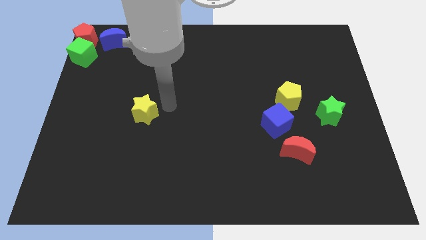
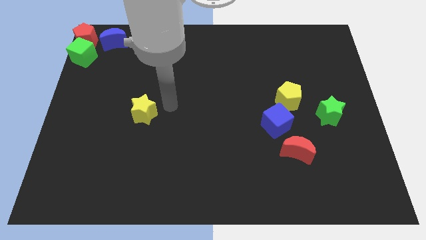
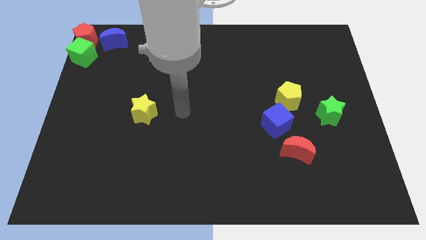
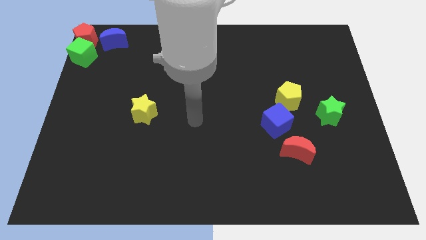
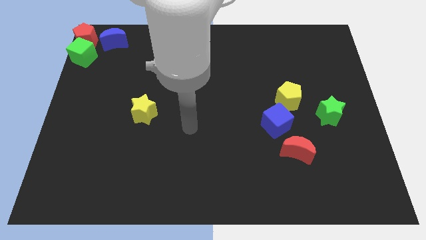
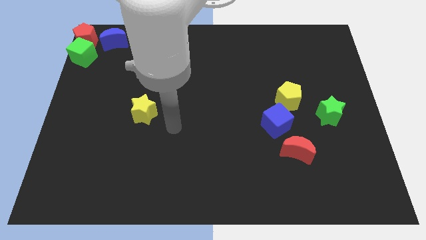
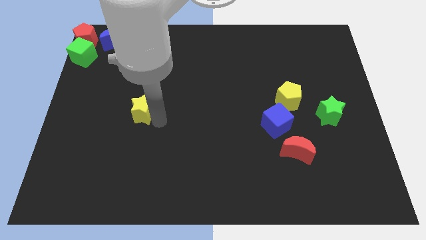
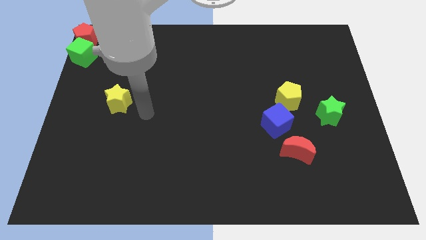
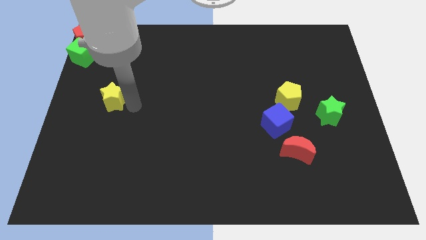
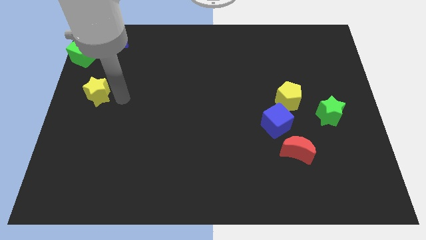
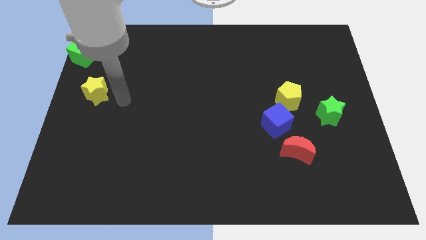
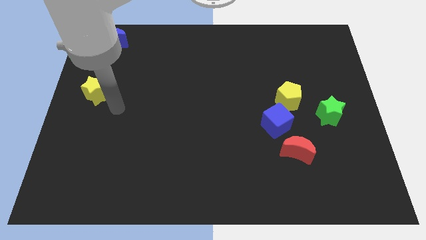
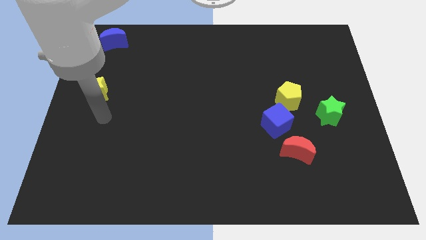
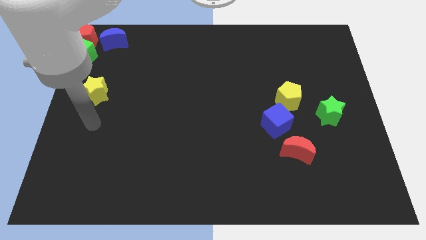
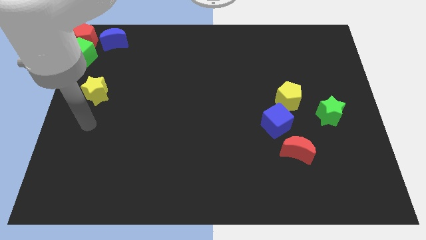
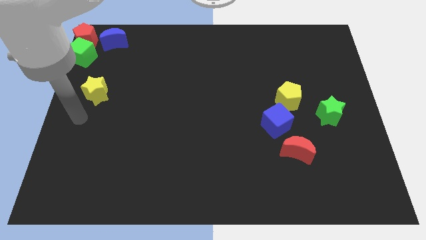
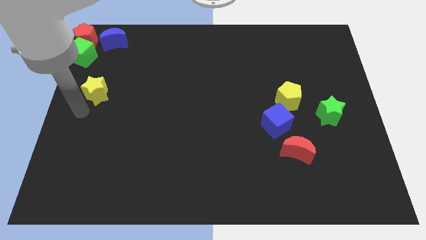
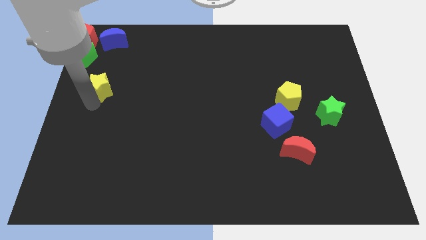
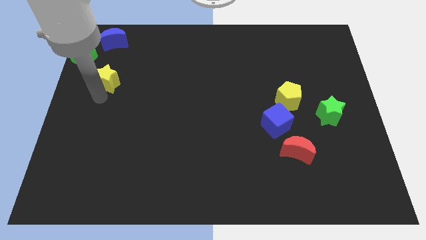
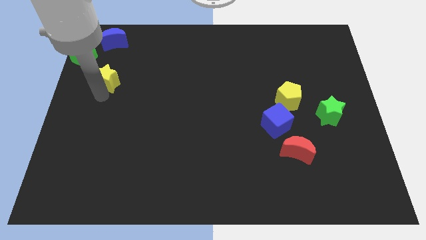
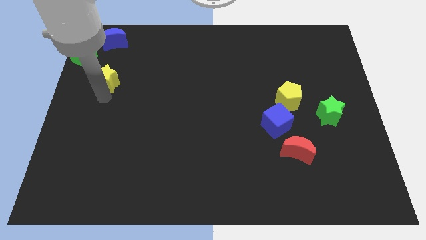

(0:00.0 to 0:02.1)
move the yellow star towards the top left corner

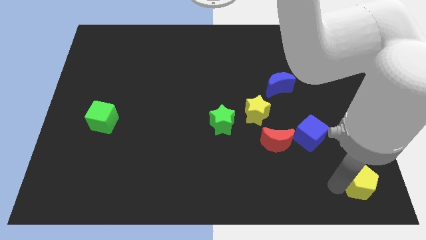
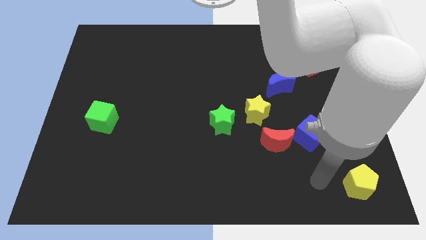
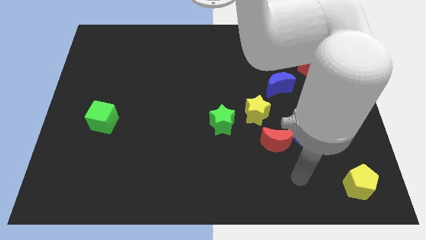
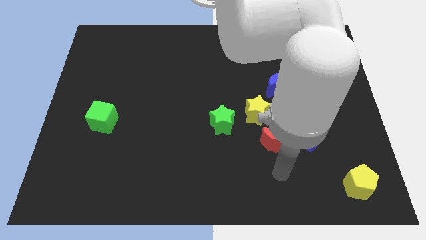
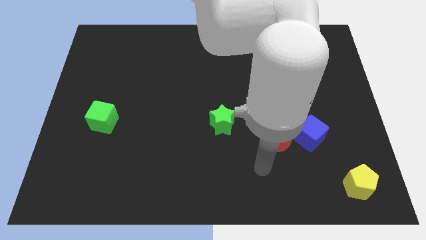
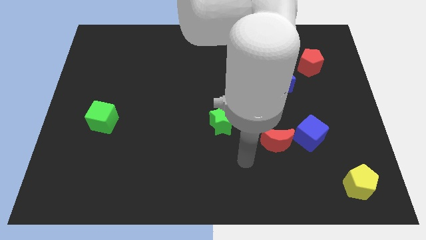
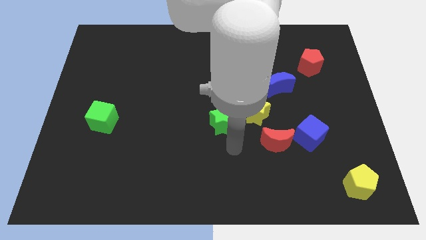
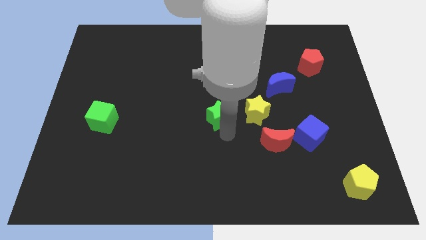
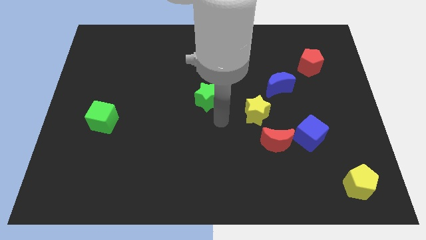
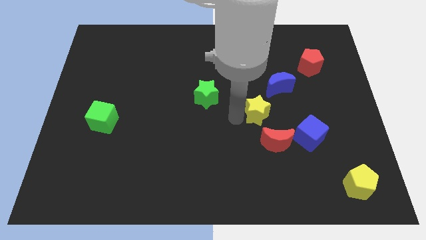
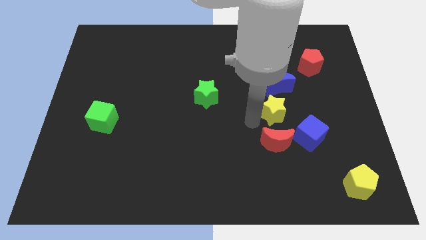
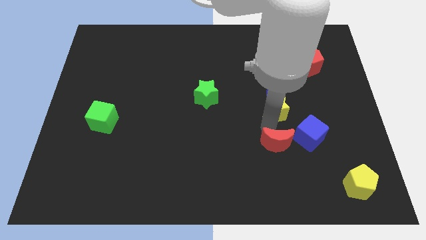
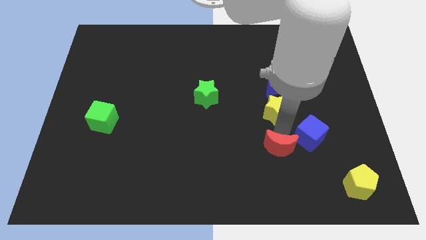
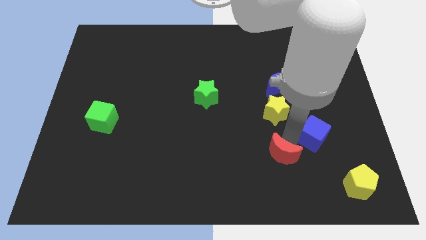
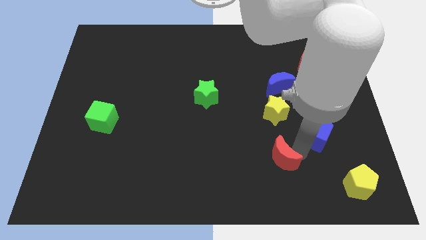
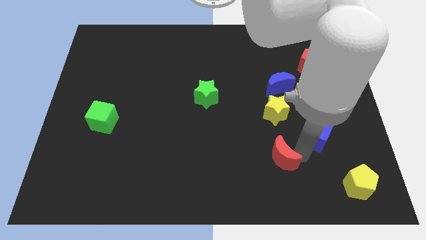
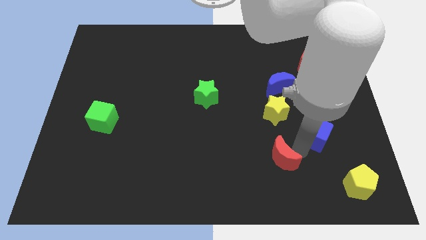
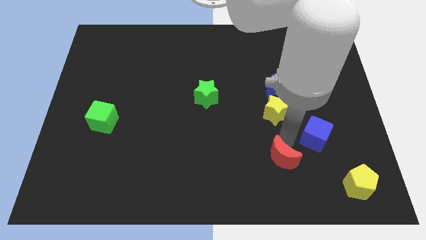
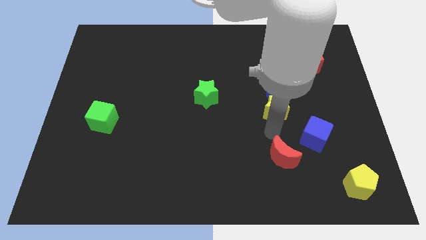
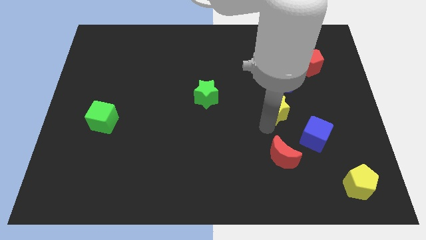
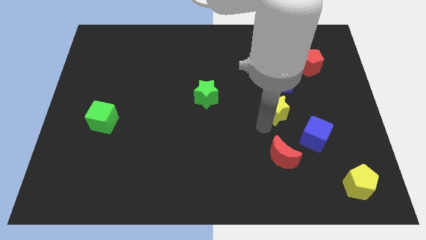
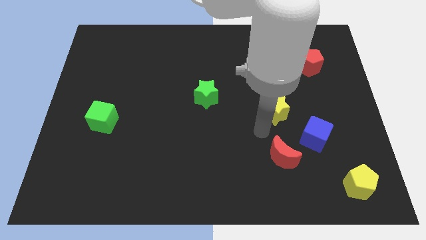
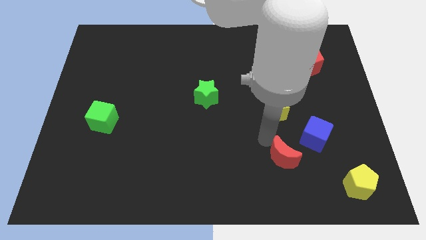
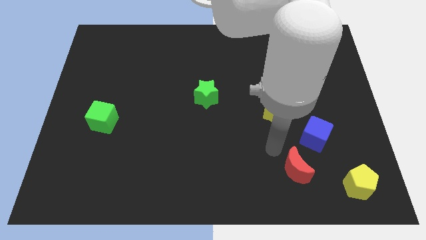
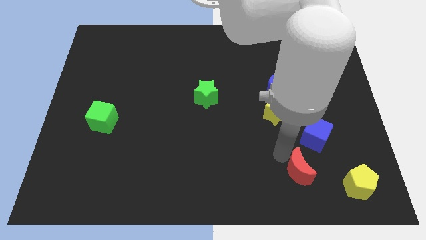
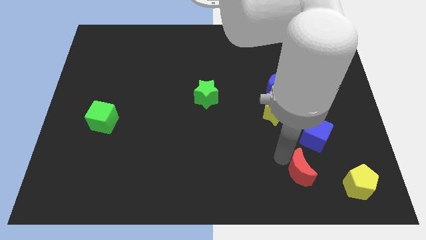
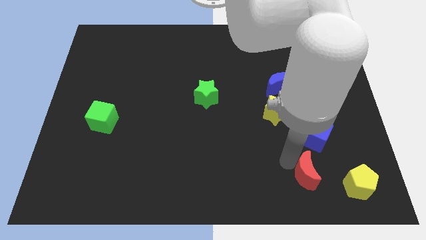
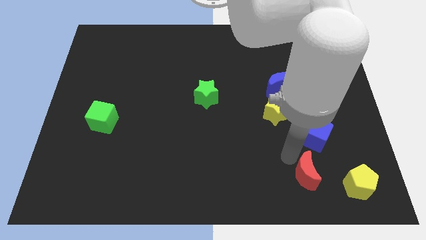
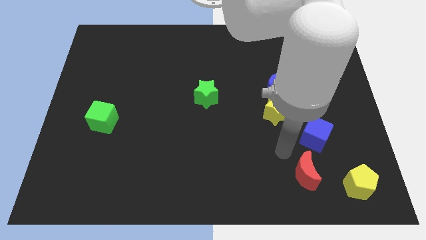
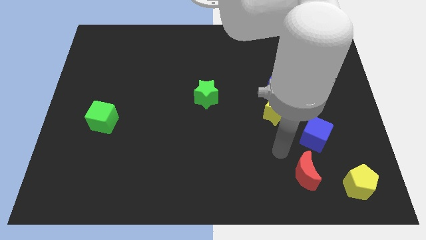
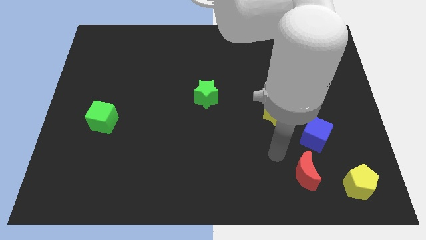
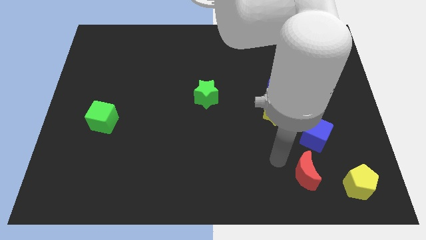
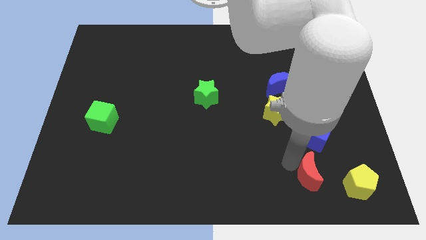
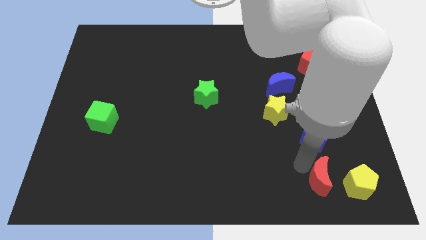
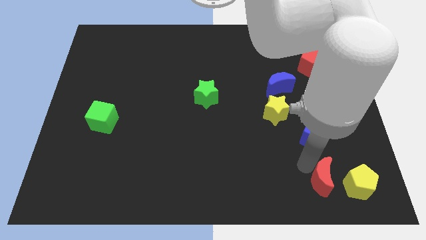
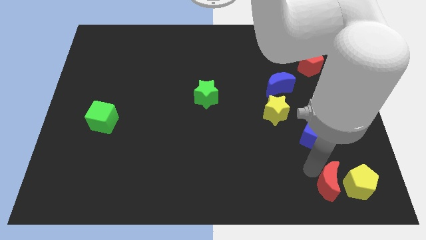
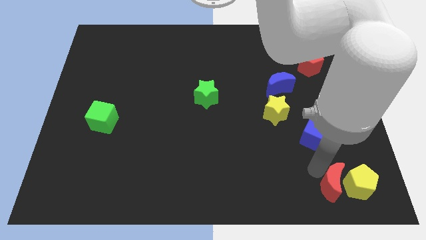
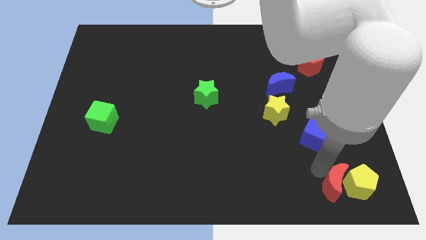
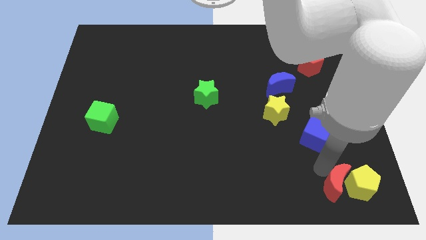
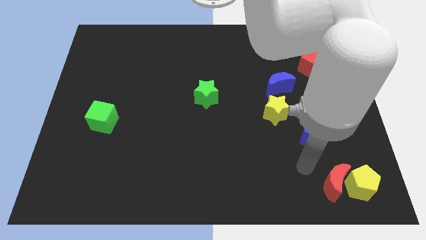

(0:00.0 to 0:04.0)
push the red crescent left to the yellow pentagon

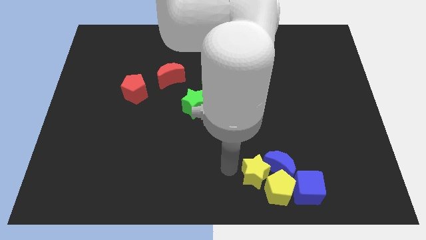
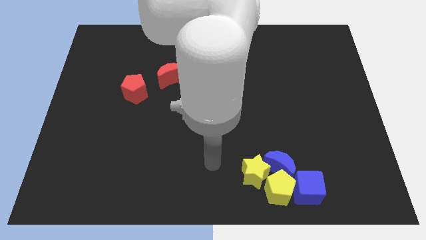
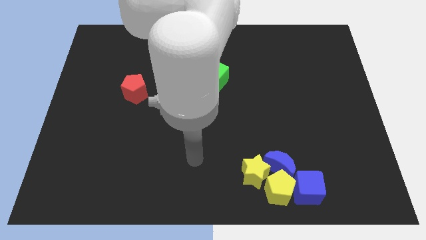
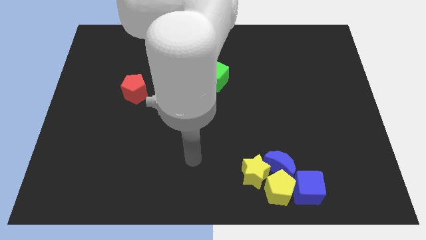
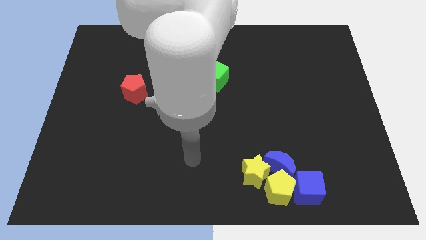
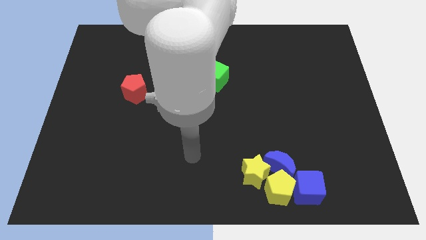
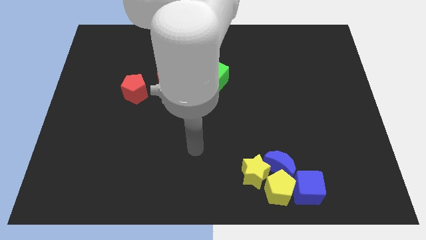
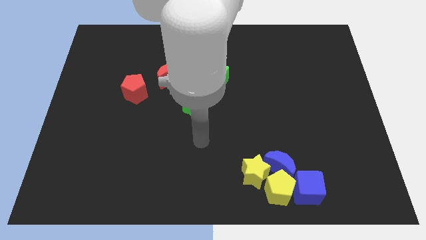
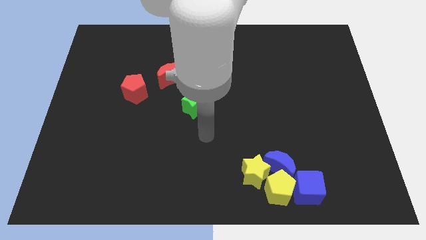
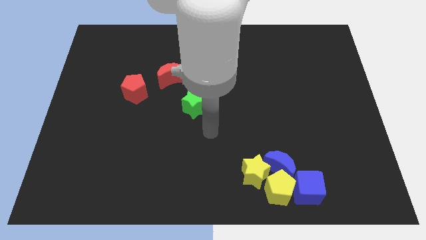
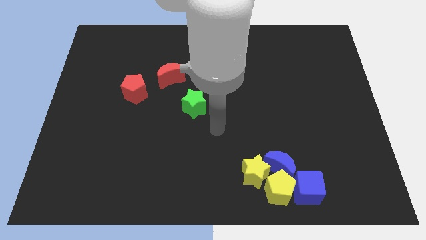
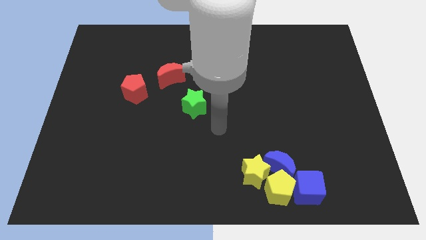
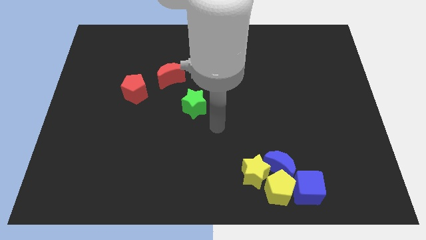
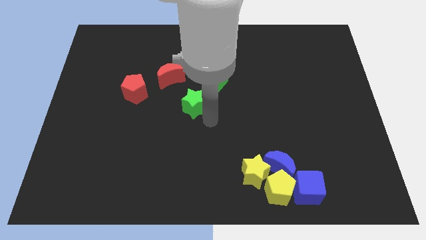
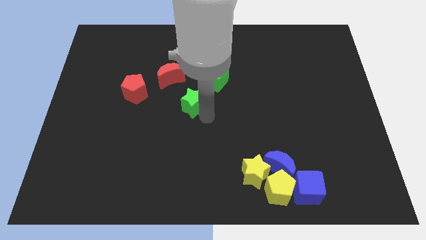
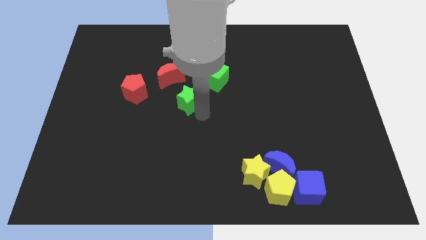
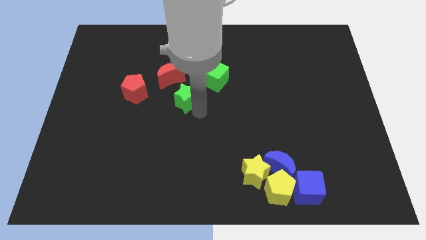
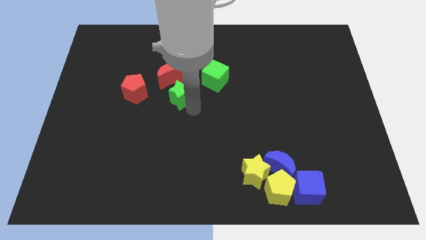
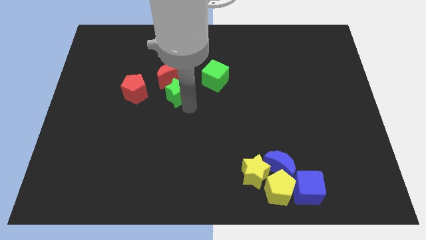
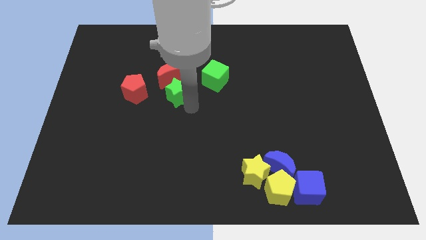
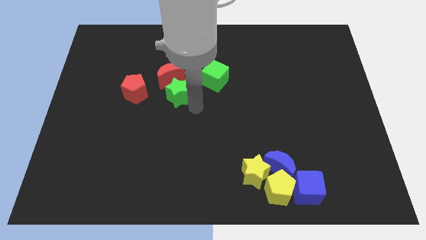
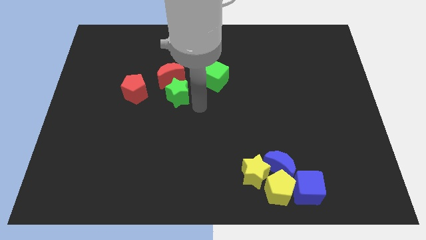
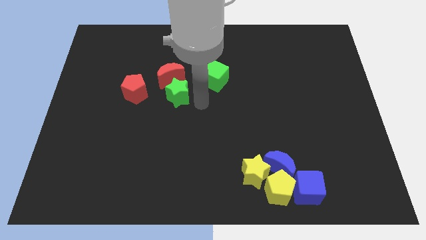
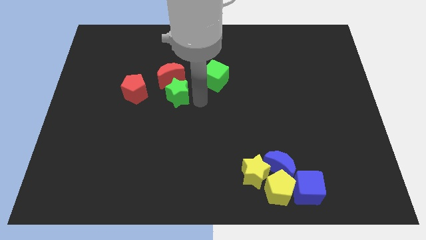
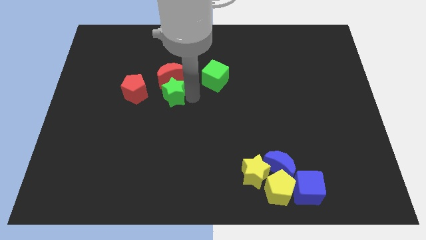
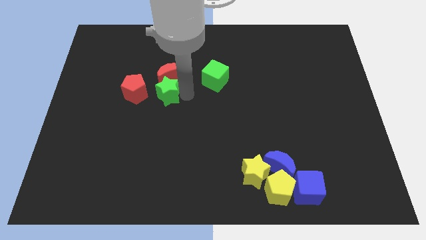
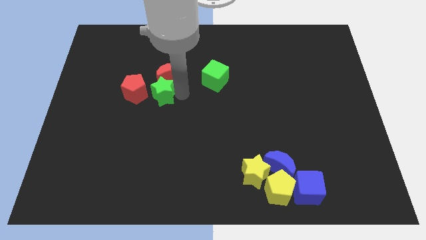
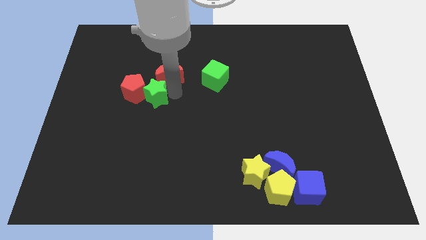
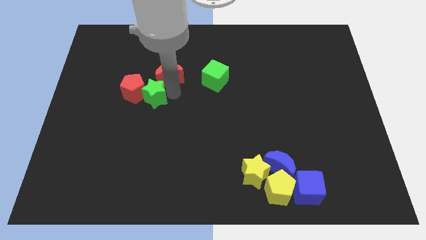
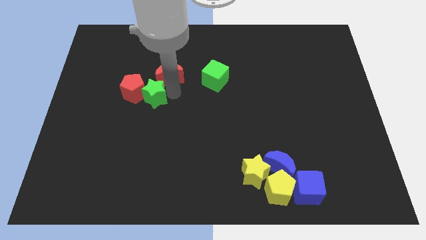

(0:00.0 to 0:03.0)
move the green star into the red pentagon
